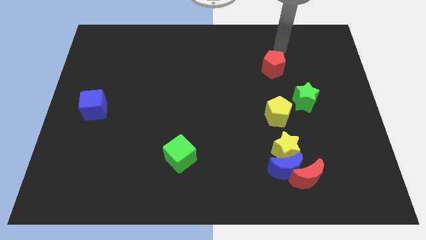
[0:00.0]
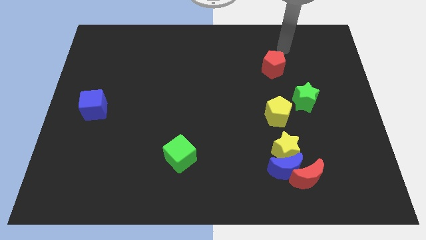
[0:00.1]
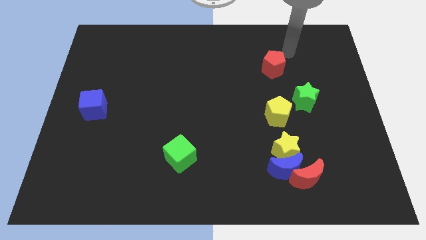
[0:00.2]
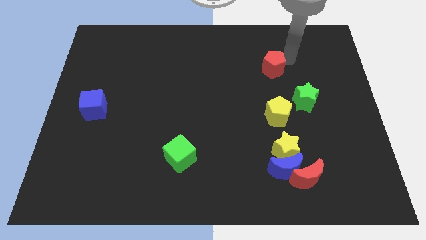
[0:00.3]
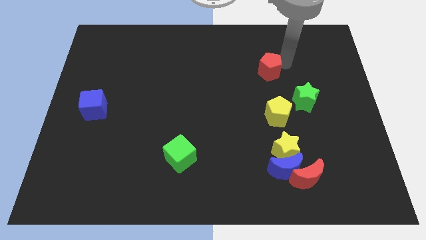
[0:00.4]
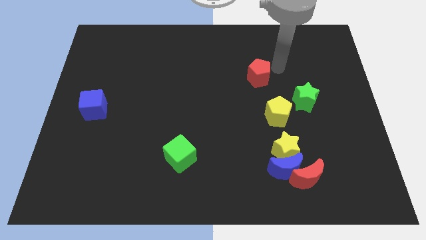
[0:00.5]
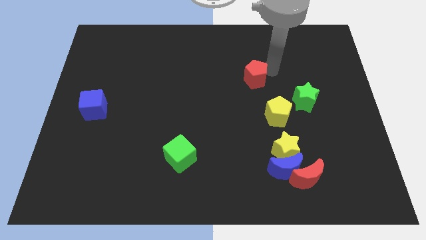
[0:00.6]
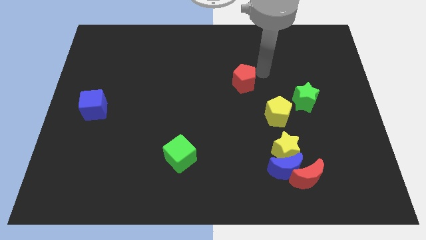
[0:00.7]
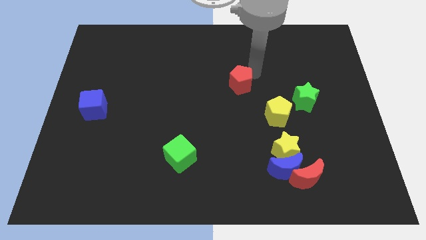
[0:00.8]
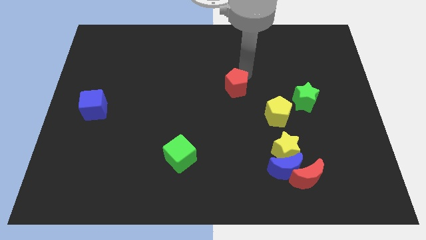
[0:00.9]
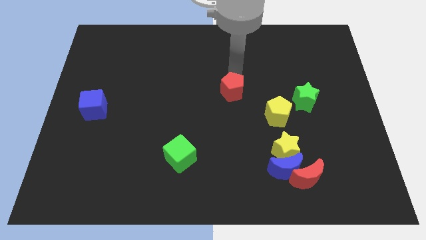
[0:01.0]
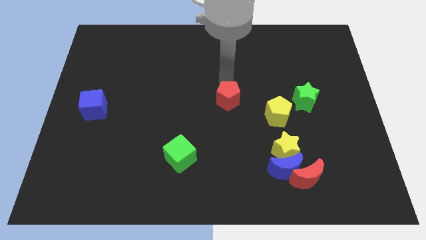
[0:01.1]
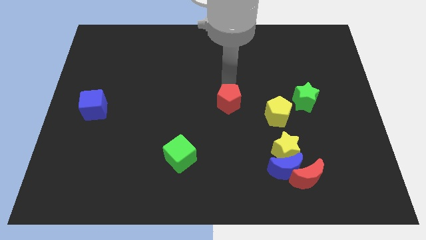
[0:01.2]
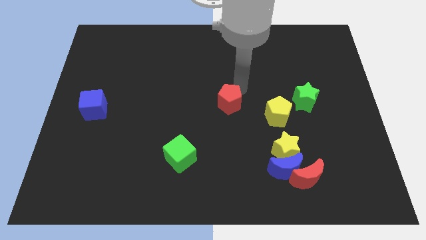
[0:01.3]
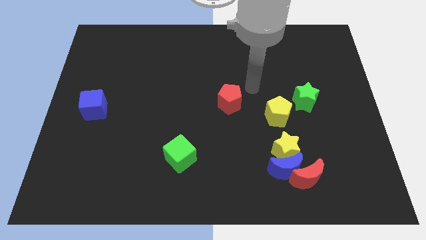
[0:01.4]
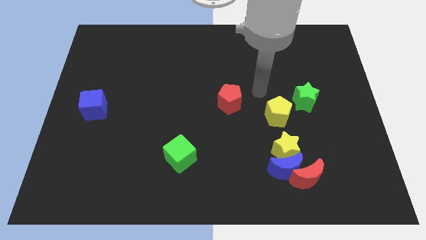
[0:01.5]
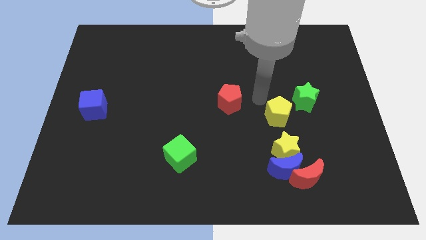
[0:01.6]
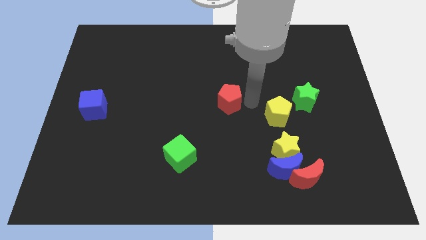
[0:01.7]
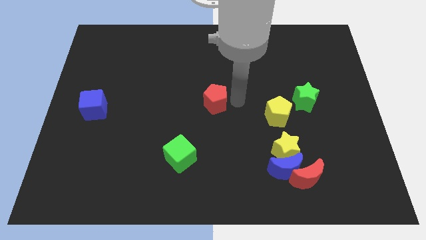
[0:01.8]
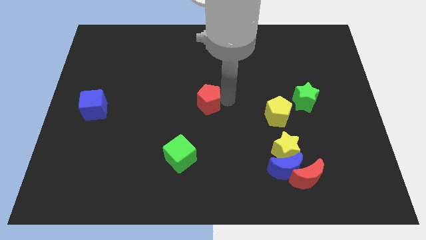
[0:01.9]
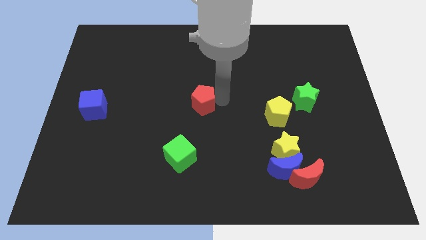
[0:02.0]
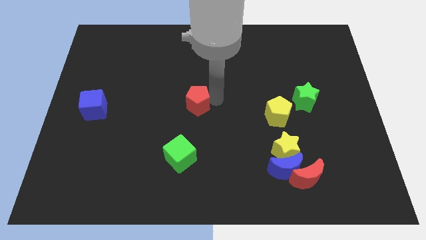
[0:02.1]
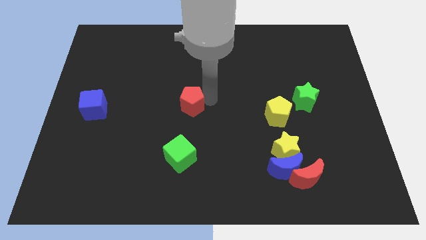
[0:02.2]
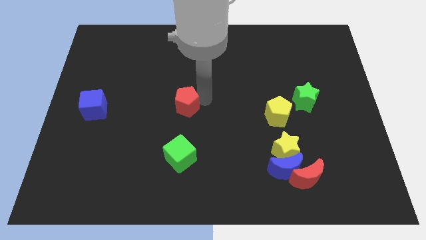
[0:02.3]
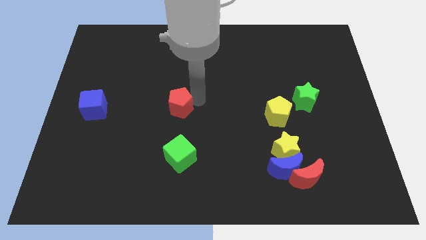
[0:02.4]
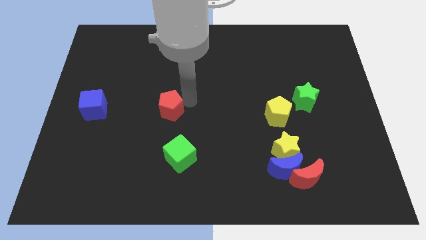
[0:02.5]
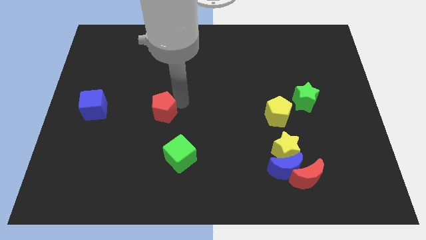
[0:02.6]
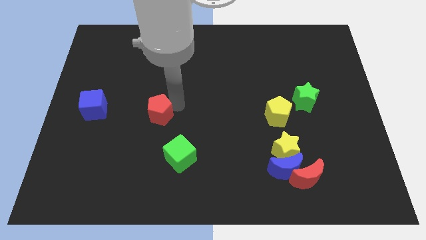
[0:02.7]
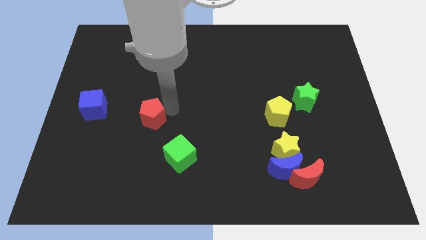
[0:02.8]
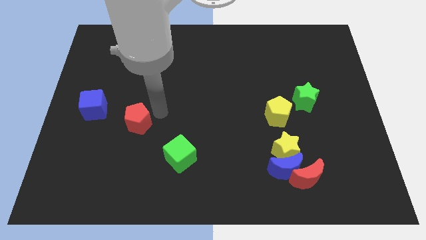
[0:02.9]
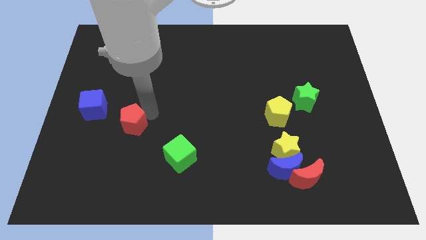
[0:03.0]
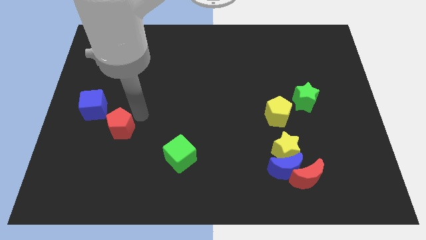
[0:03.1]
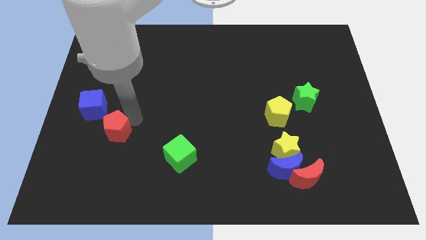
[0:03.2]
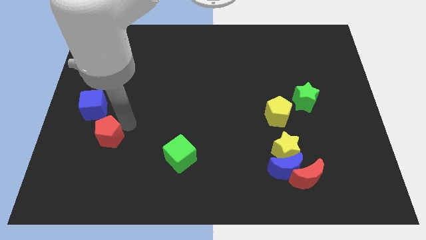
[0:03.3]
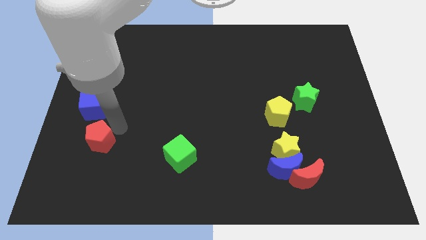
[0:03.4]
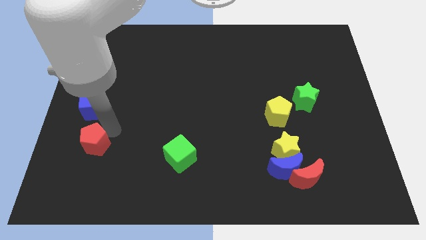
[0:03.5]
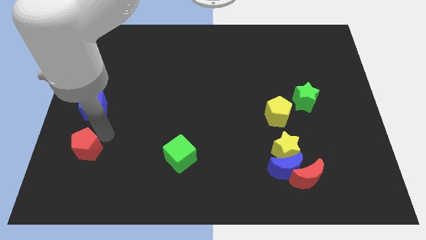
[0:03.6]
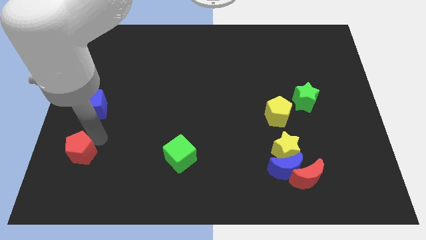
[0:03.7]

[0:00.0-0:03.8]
move the red pentagon bottom of the blue cube

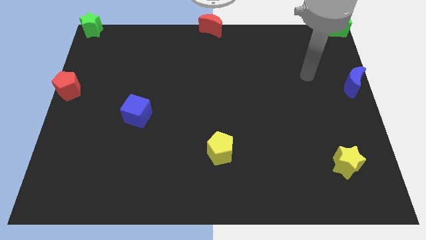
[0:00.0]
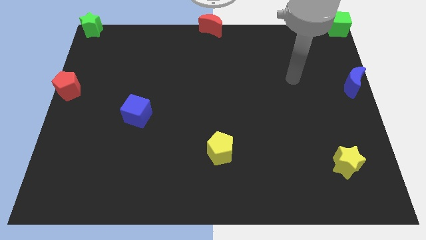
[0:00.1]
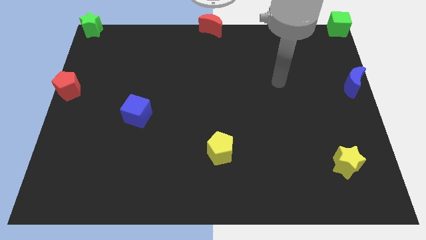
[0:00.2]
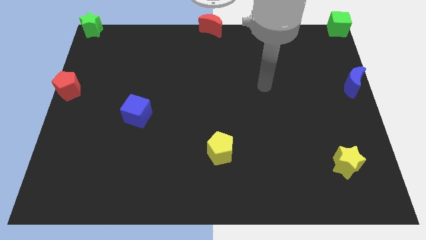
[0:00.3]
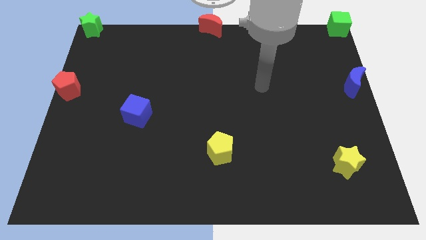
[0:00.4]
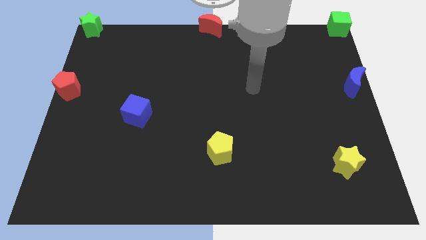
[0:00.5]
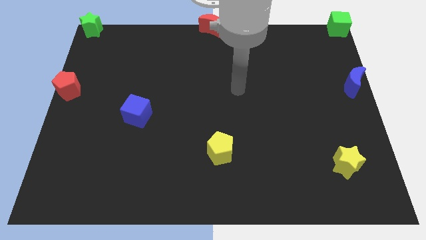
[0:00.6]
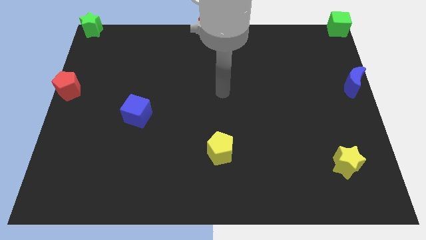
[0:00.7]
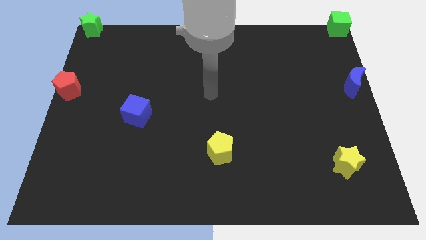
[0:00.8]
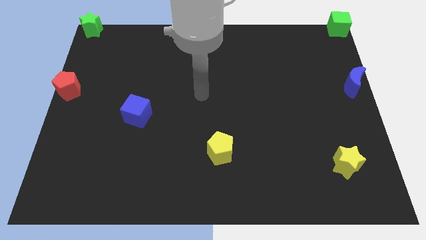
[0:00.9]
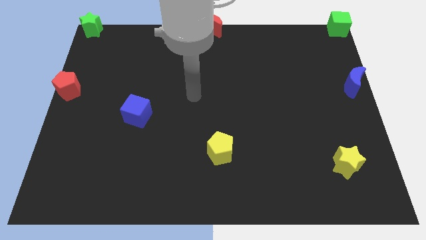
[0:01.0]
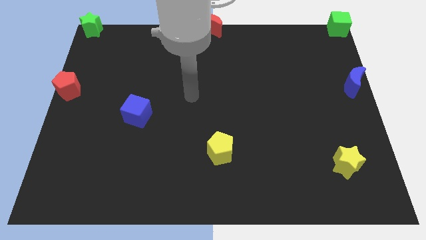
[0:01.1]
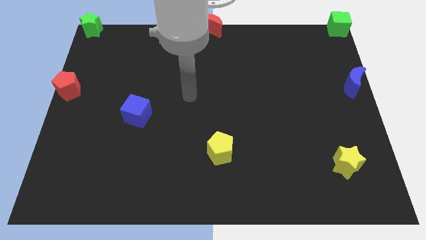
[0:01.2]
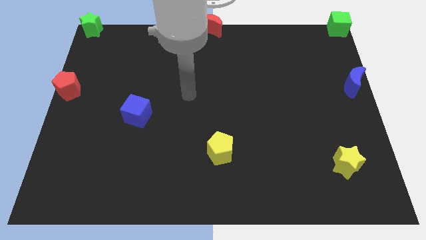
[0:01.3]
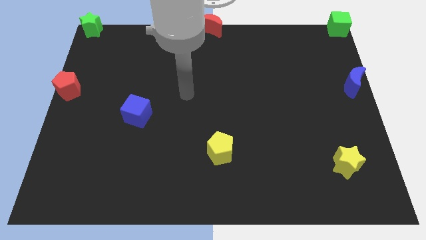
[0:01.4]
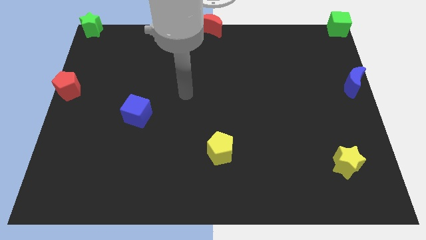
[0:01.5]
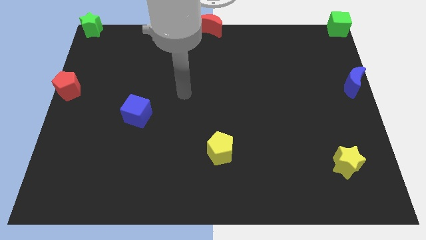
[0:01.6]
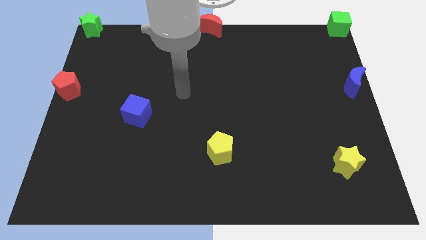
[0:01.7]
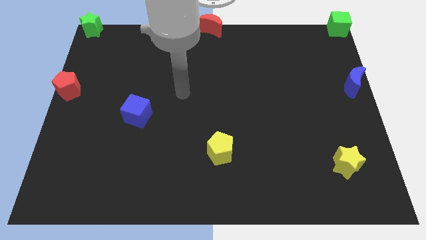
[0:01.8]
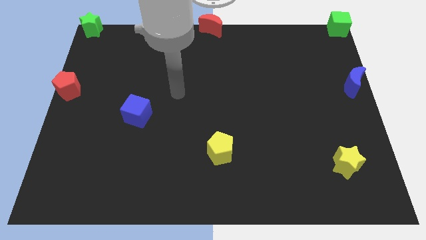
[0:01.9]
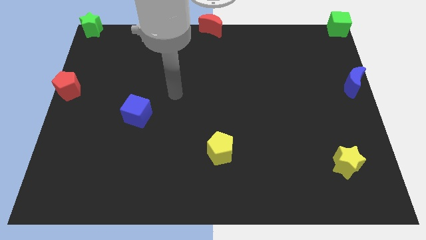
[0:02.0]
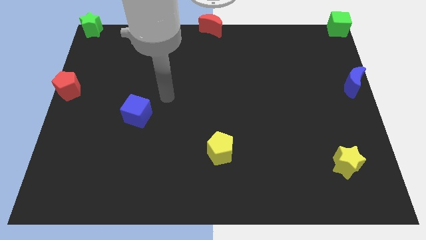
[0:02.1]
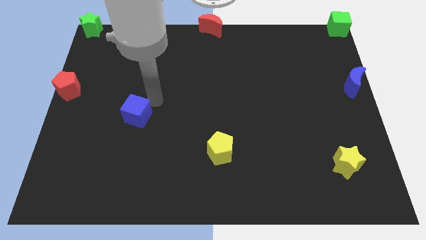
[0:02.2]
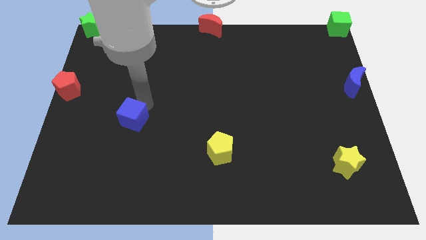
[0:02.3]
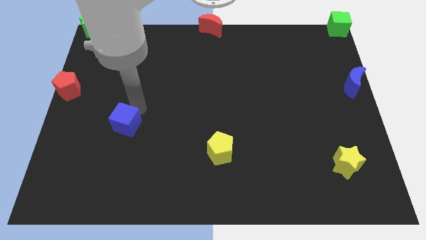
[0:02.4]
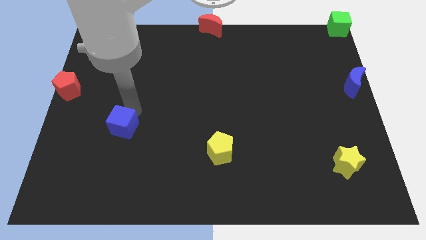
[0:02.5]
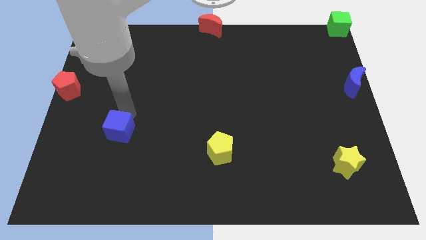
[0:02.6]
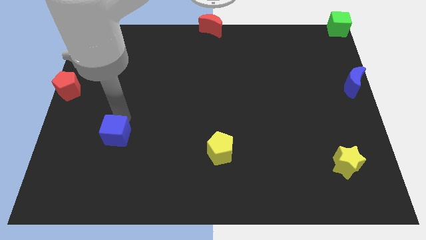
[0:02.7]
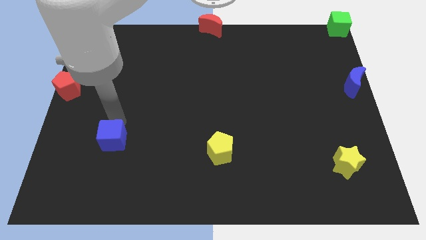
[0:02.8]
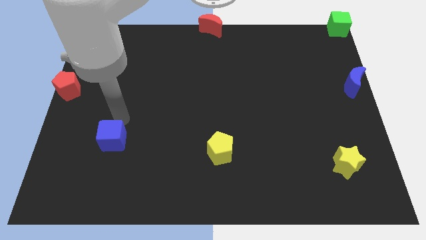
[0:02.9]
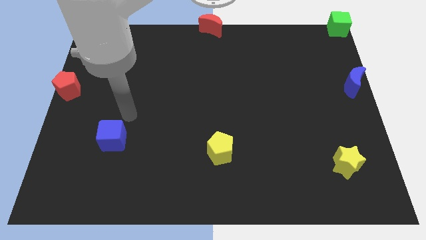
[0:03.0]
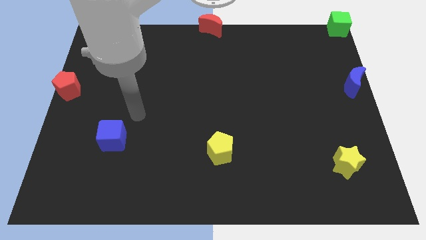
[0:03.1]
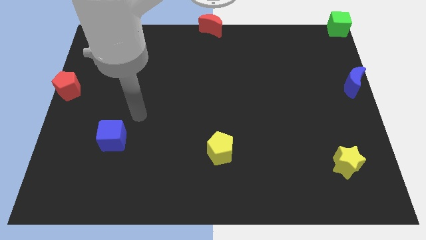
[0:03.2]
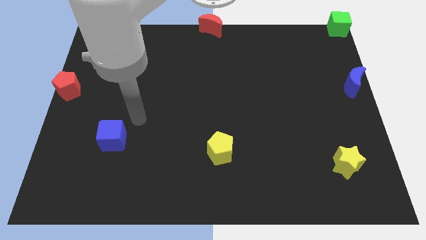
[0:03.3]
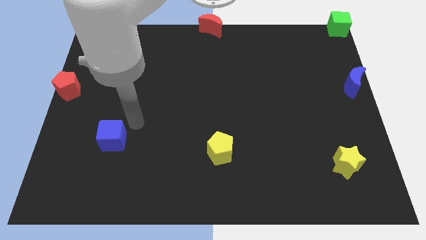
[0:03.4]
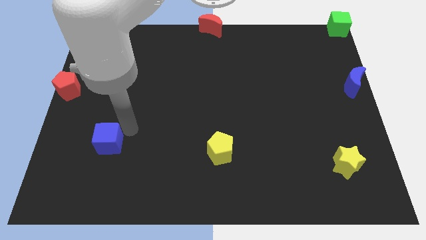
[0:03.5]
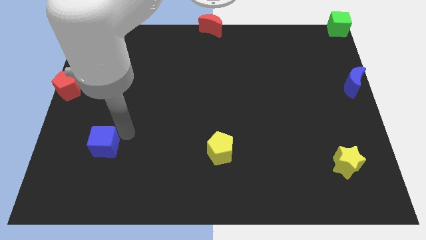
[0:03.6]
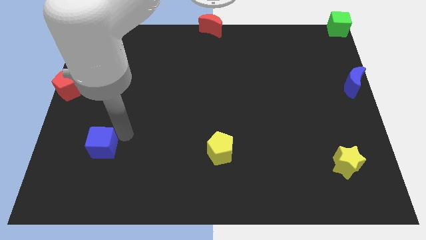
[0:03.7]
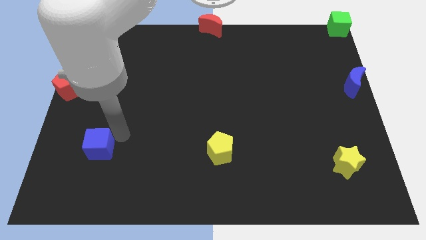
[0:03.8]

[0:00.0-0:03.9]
move the blue cube to the left of the yellow pentagon

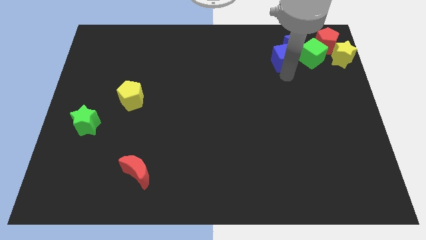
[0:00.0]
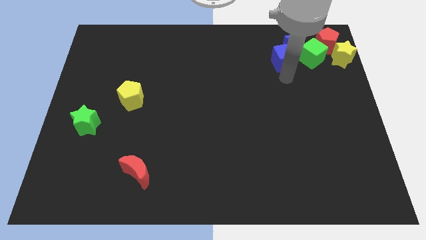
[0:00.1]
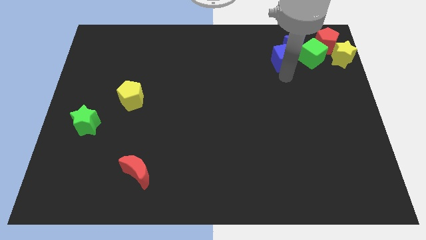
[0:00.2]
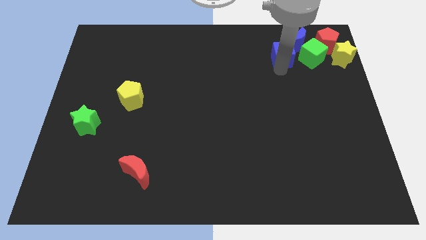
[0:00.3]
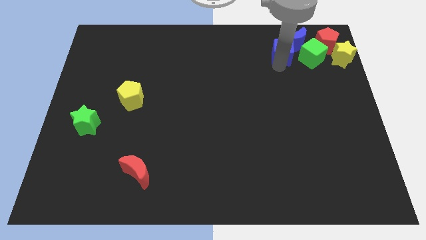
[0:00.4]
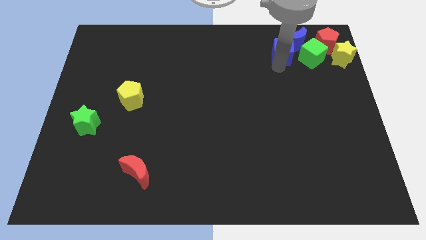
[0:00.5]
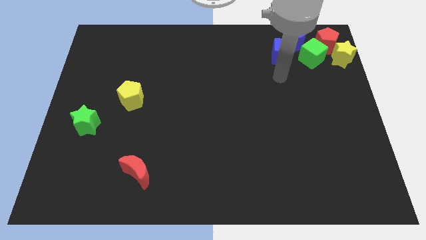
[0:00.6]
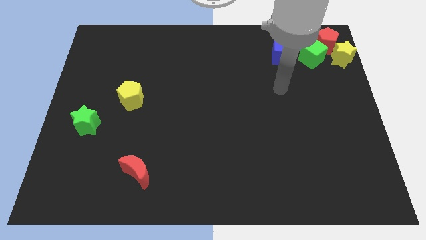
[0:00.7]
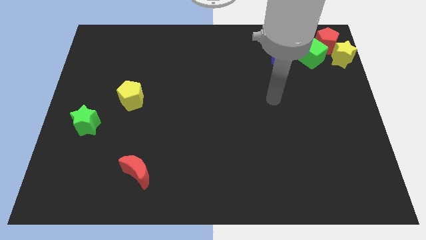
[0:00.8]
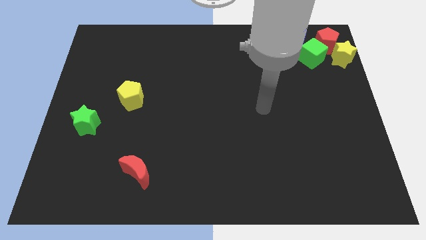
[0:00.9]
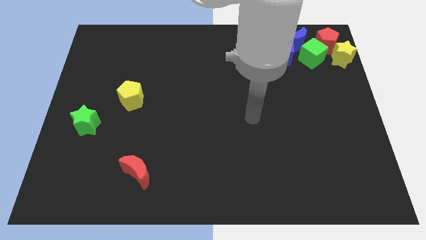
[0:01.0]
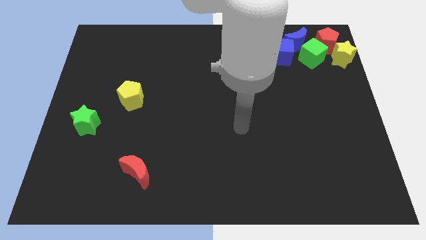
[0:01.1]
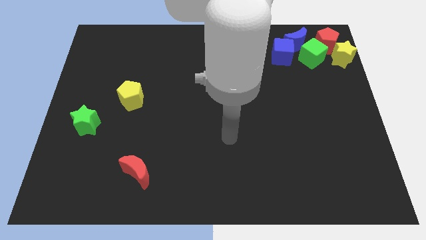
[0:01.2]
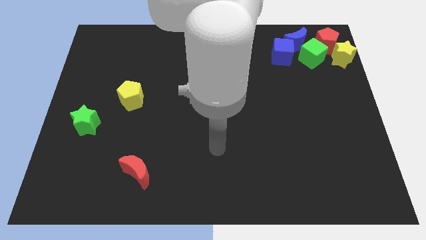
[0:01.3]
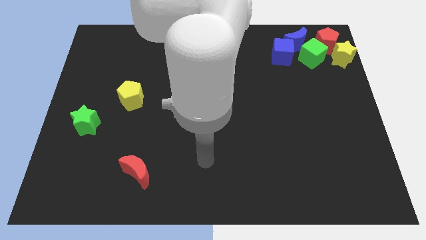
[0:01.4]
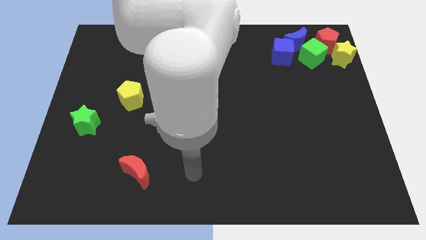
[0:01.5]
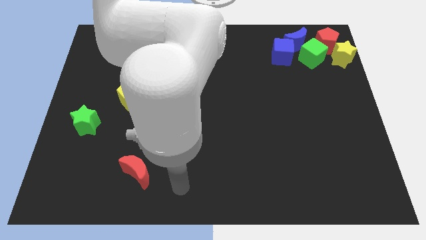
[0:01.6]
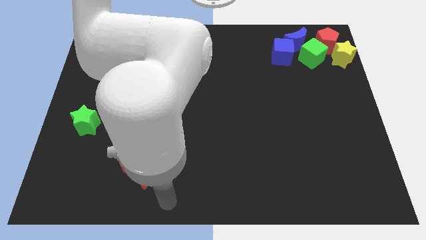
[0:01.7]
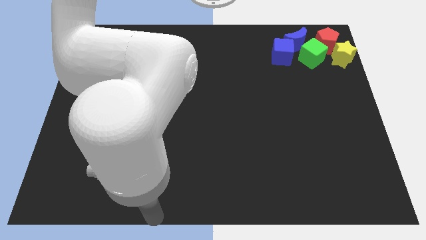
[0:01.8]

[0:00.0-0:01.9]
move the blue cube into the blue crescent
